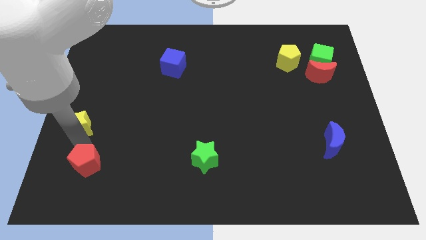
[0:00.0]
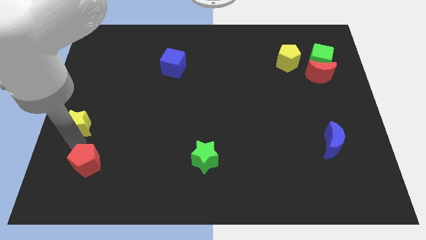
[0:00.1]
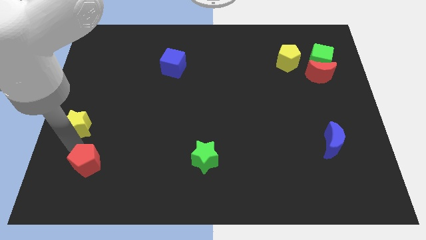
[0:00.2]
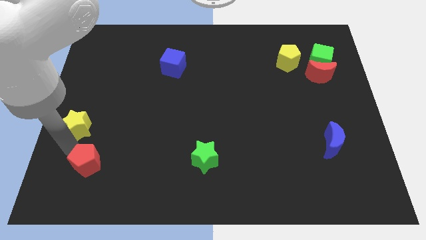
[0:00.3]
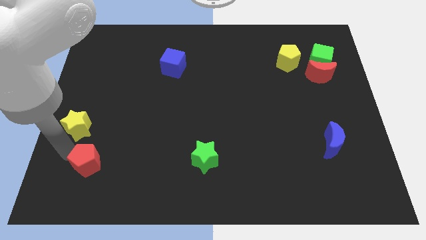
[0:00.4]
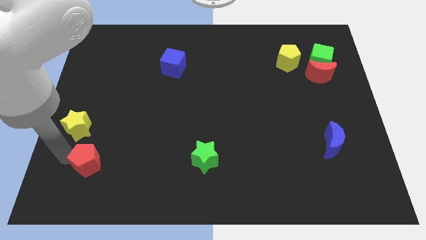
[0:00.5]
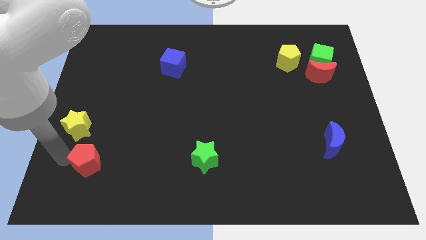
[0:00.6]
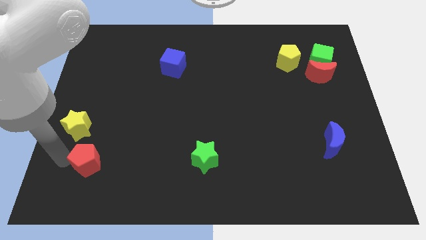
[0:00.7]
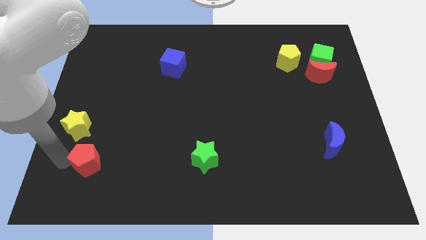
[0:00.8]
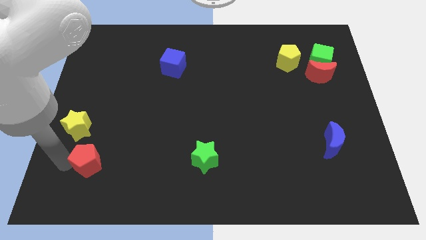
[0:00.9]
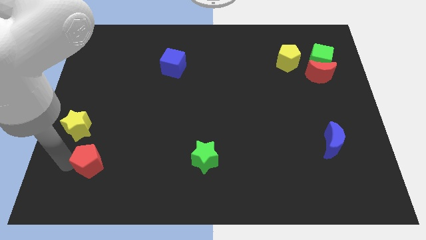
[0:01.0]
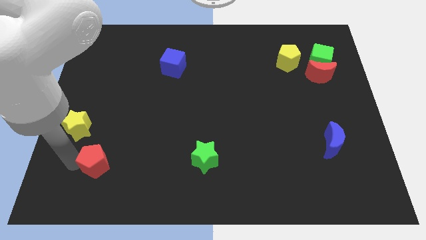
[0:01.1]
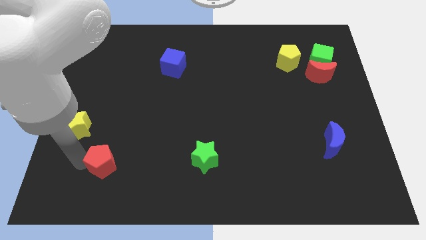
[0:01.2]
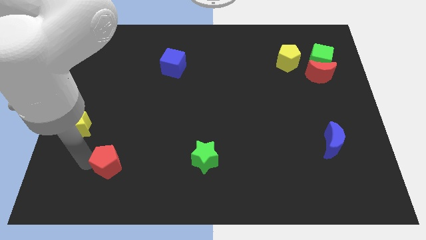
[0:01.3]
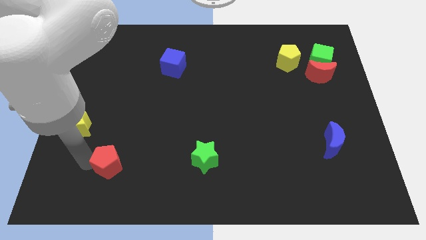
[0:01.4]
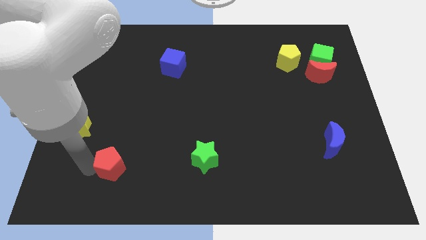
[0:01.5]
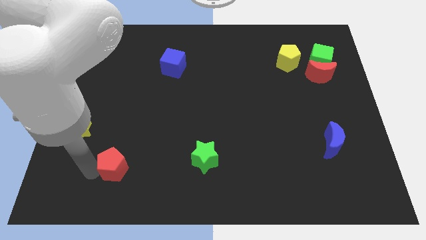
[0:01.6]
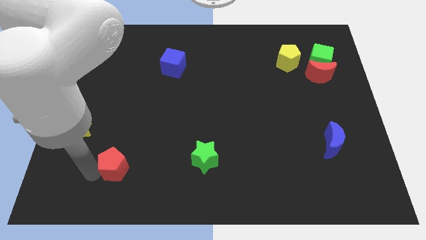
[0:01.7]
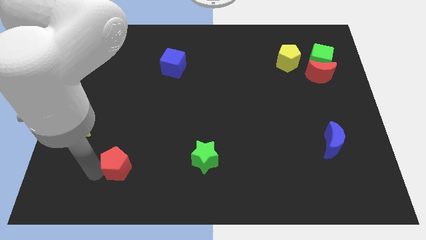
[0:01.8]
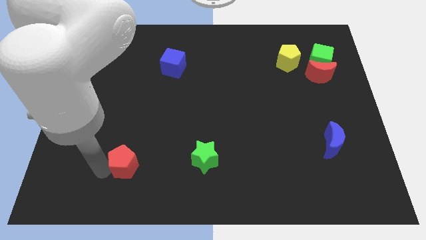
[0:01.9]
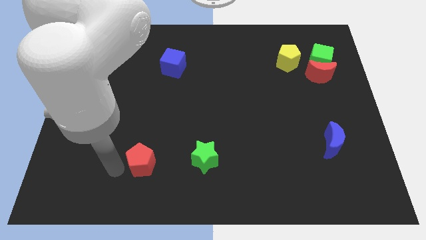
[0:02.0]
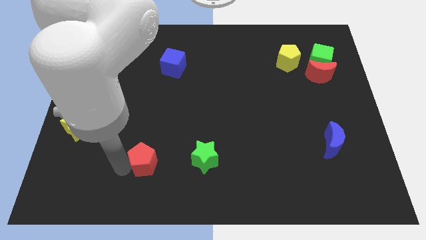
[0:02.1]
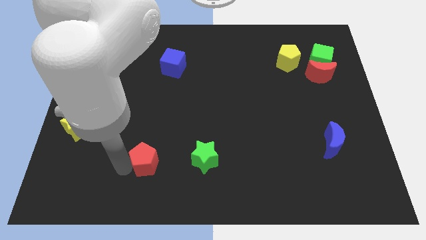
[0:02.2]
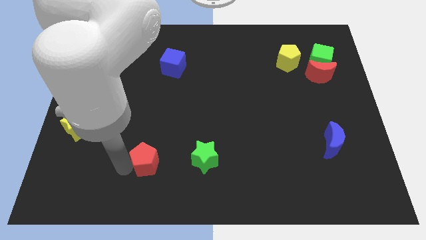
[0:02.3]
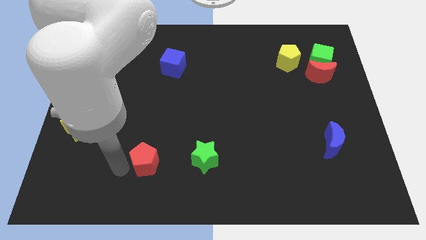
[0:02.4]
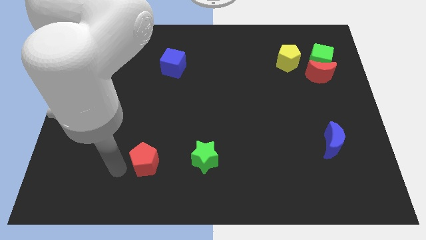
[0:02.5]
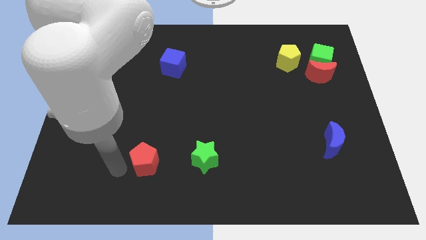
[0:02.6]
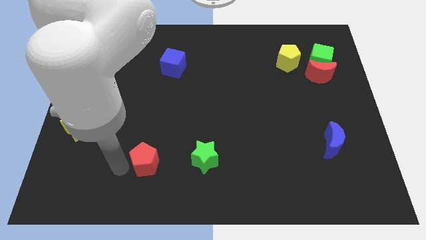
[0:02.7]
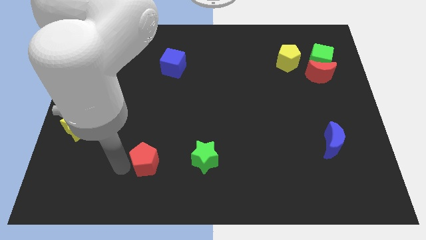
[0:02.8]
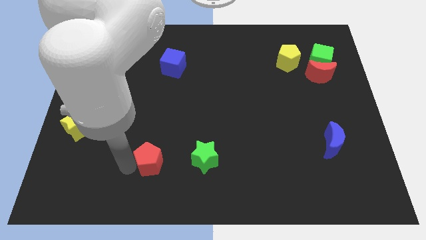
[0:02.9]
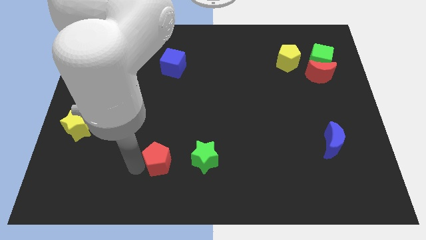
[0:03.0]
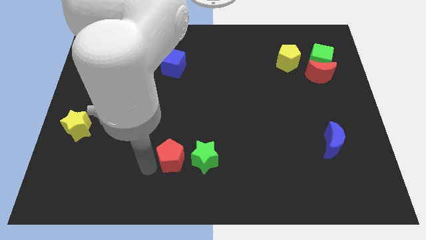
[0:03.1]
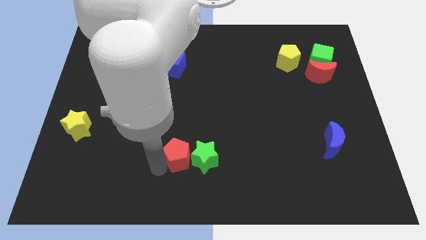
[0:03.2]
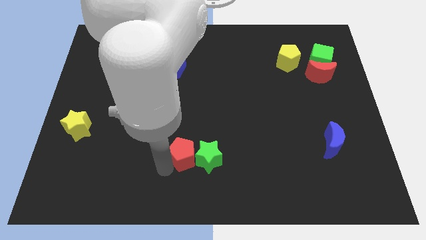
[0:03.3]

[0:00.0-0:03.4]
push the red pentagon close to the green star

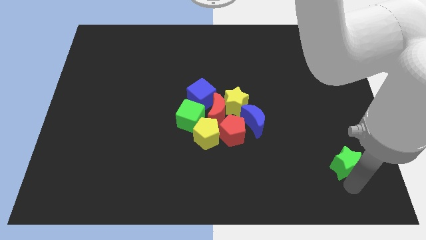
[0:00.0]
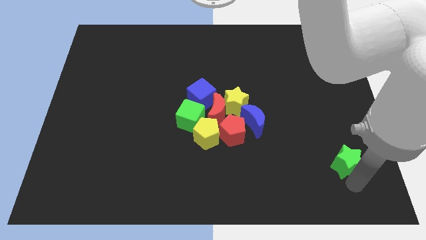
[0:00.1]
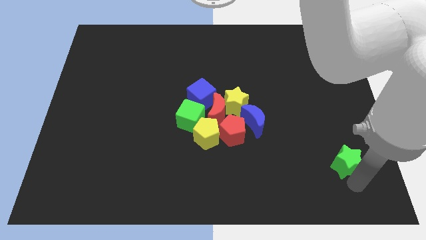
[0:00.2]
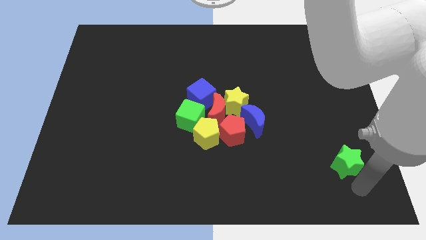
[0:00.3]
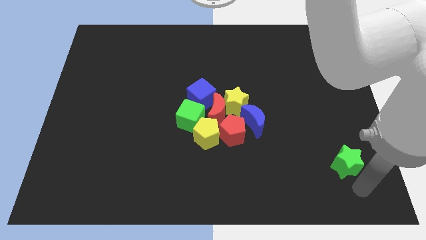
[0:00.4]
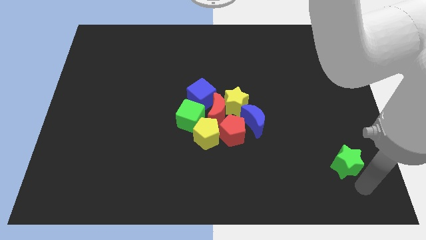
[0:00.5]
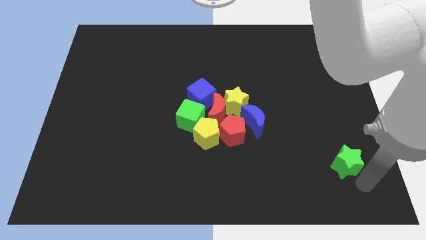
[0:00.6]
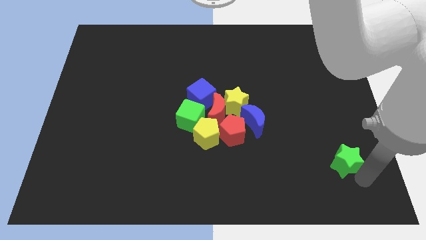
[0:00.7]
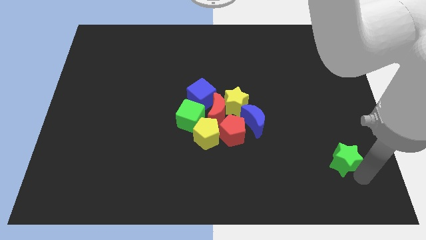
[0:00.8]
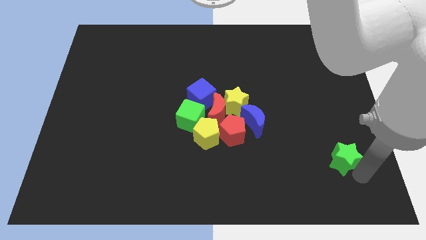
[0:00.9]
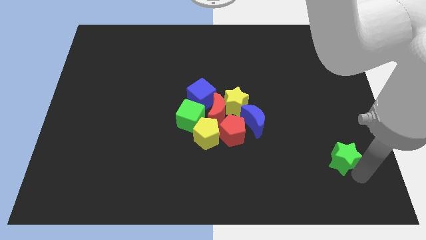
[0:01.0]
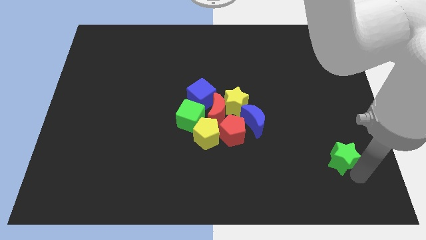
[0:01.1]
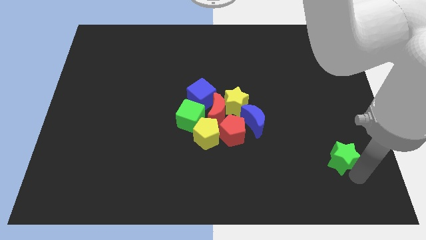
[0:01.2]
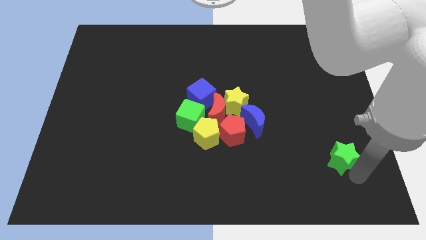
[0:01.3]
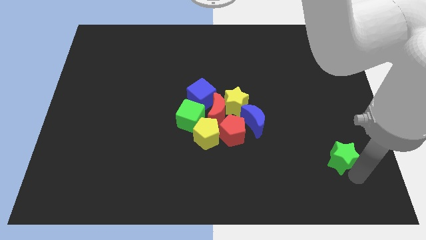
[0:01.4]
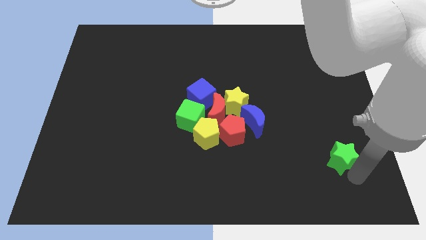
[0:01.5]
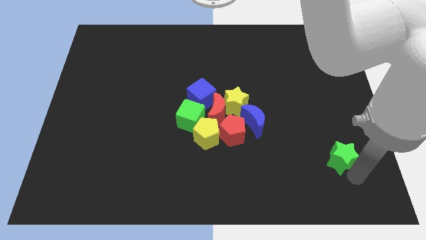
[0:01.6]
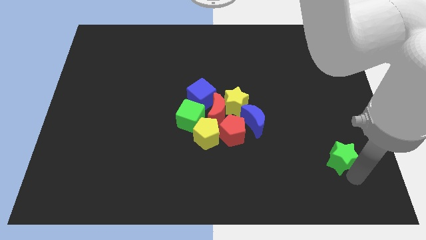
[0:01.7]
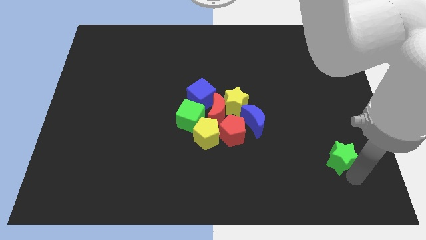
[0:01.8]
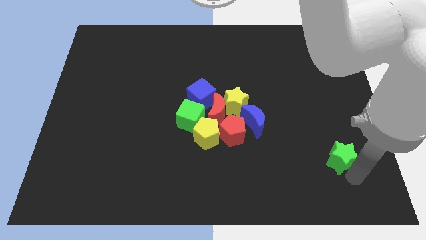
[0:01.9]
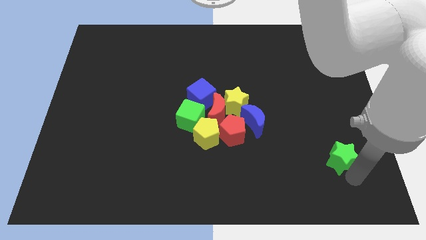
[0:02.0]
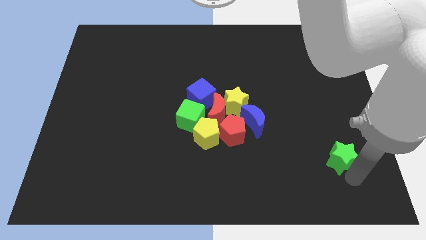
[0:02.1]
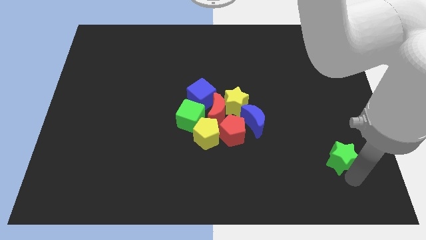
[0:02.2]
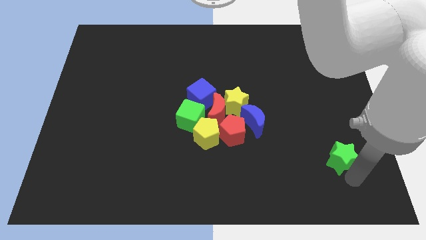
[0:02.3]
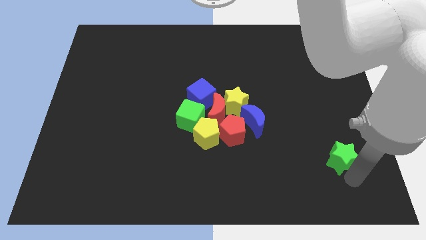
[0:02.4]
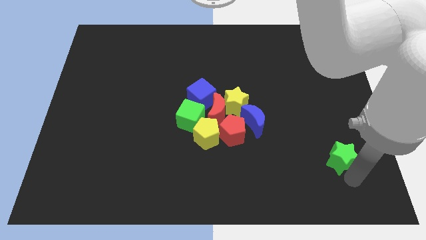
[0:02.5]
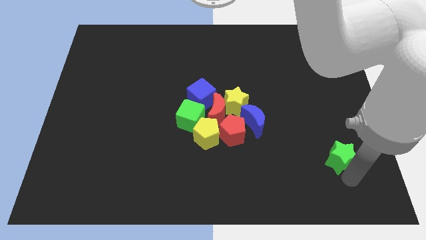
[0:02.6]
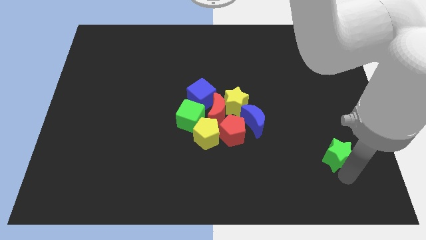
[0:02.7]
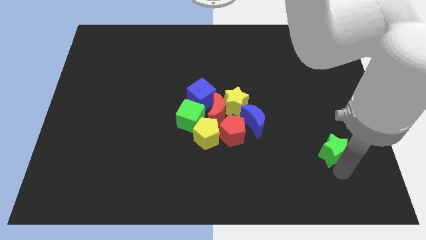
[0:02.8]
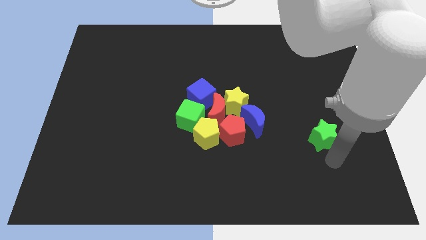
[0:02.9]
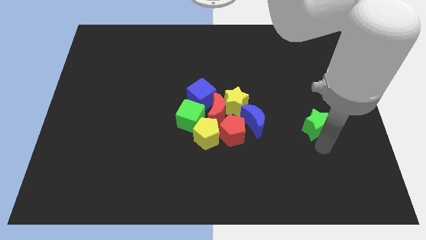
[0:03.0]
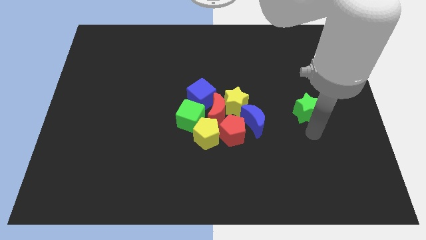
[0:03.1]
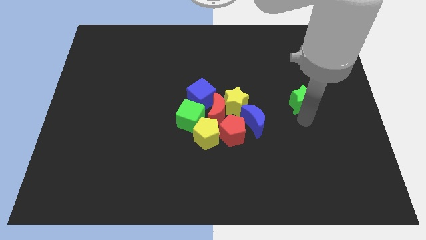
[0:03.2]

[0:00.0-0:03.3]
push the green star to the right of the yellow star

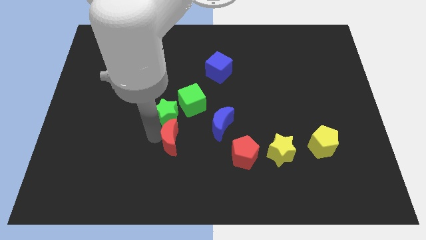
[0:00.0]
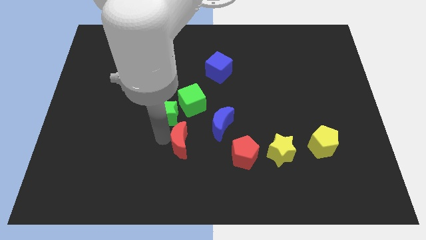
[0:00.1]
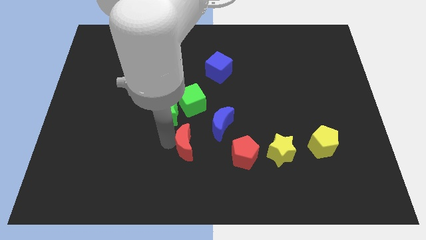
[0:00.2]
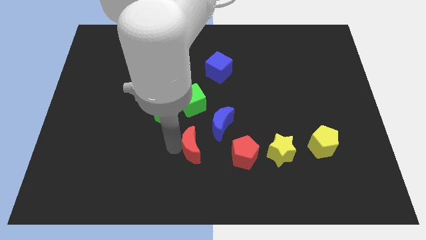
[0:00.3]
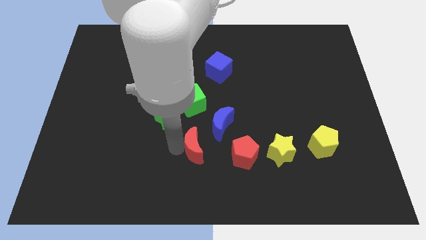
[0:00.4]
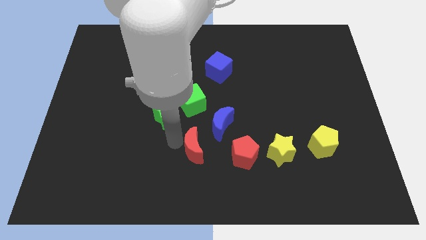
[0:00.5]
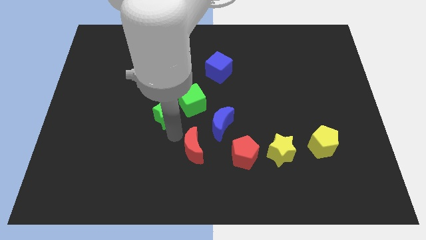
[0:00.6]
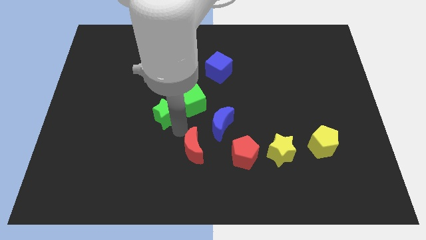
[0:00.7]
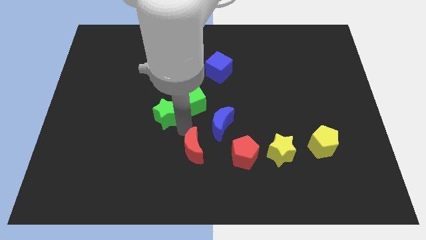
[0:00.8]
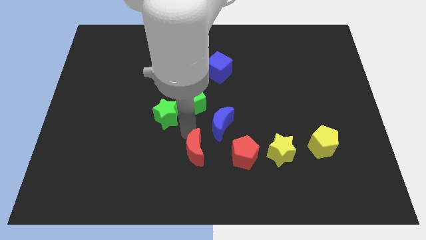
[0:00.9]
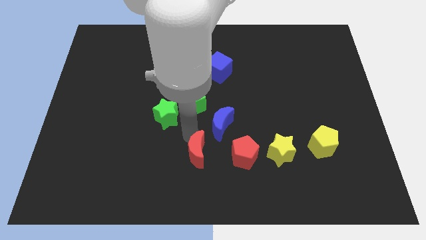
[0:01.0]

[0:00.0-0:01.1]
place red moon to the bottom of green cube

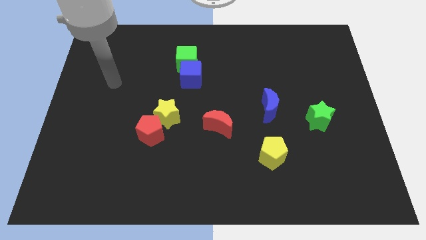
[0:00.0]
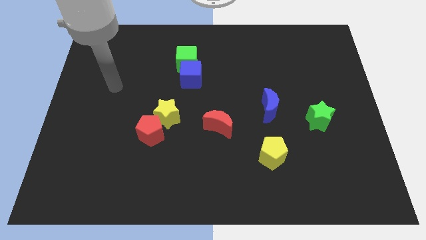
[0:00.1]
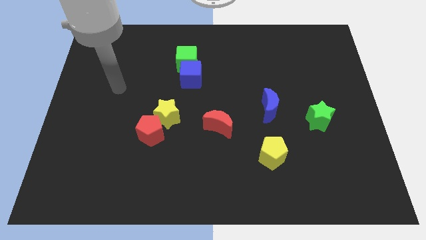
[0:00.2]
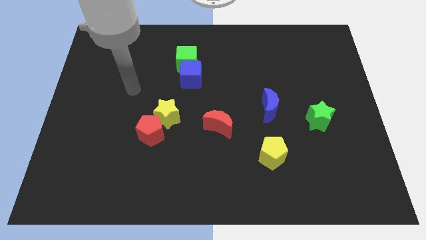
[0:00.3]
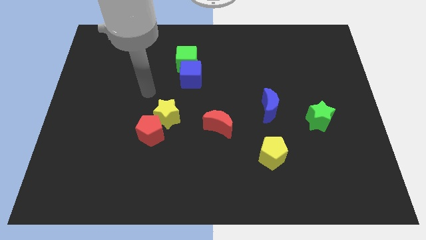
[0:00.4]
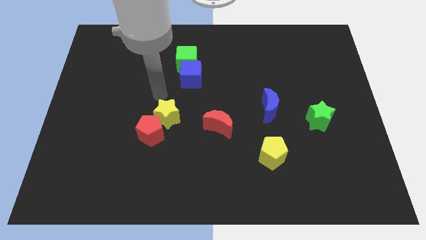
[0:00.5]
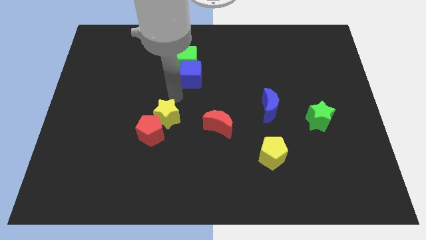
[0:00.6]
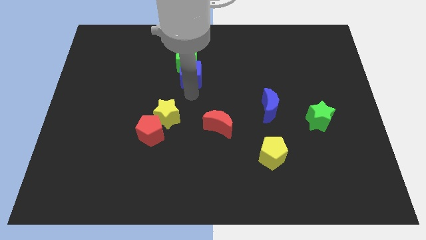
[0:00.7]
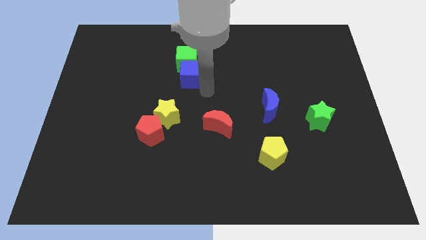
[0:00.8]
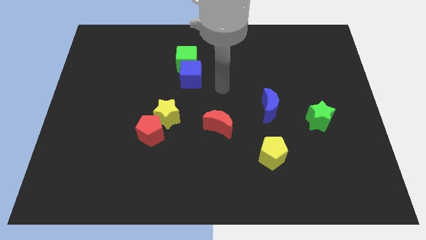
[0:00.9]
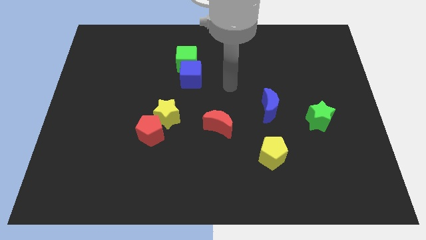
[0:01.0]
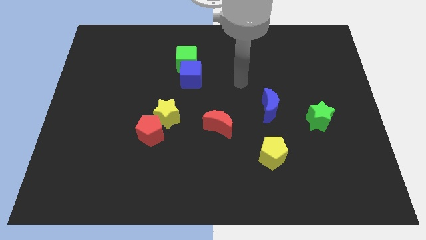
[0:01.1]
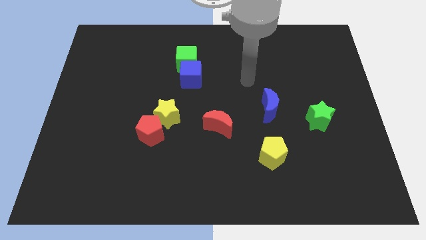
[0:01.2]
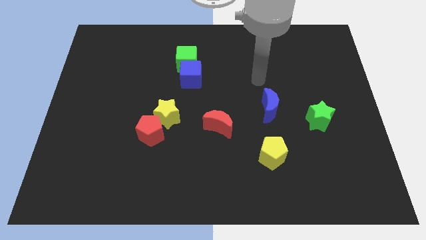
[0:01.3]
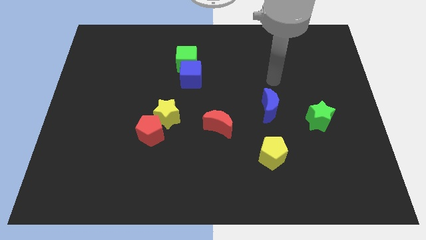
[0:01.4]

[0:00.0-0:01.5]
place your arm above the blue crescent
